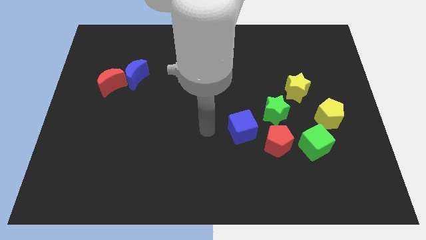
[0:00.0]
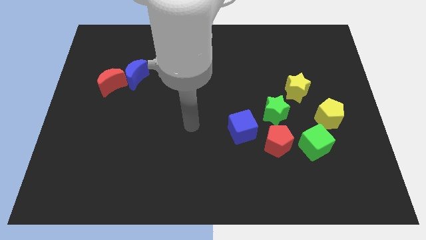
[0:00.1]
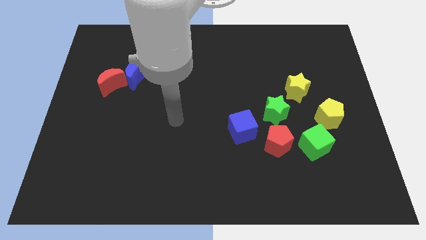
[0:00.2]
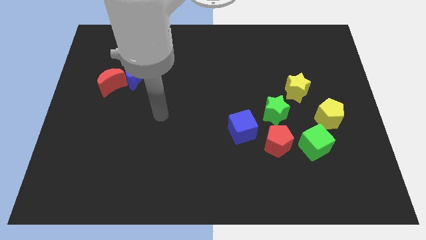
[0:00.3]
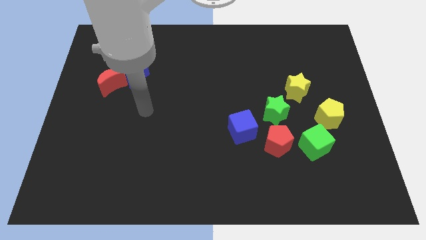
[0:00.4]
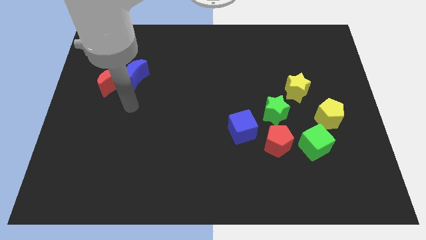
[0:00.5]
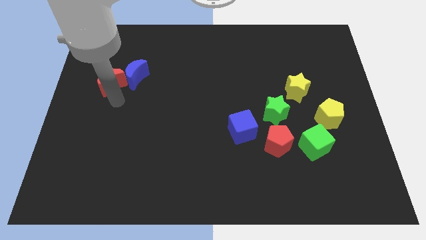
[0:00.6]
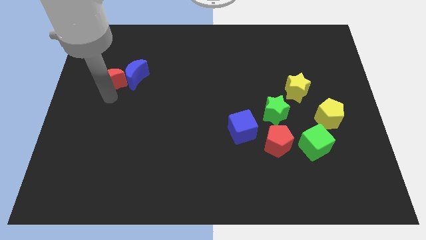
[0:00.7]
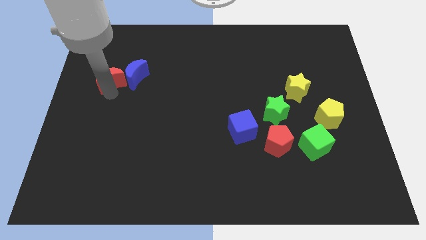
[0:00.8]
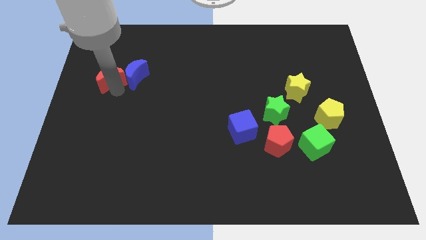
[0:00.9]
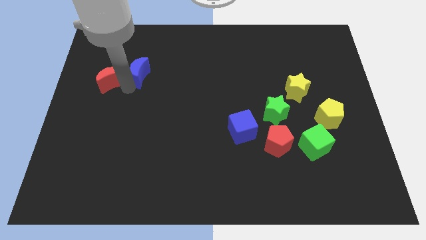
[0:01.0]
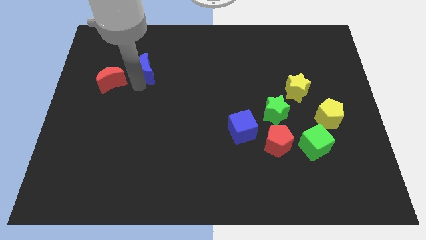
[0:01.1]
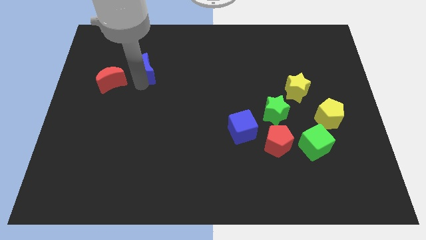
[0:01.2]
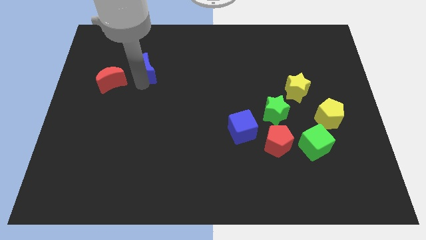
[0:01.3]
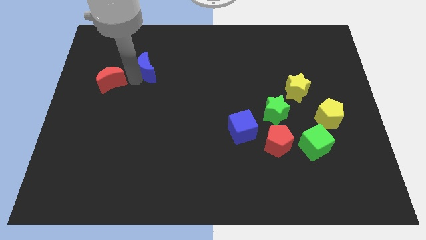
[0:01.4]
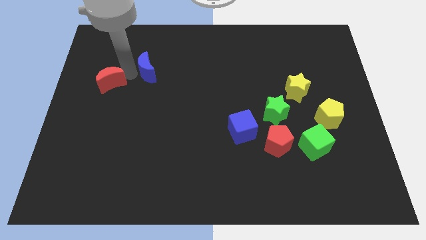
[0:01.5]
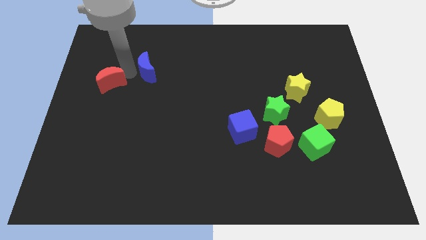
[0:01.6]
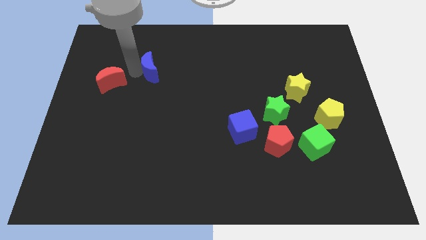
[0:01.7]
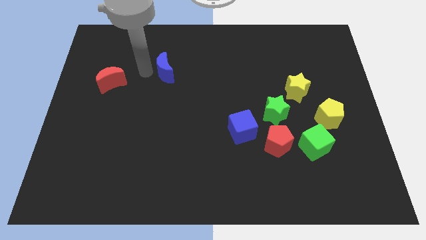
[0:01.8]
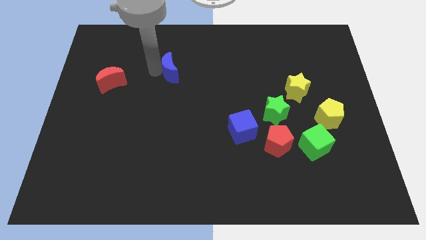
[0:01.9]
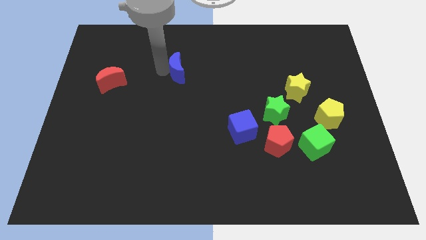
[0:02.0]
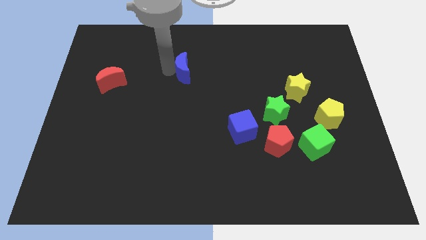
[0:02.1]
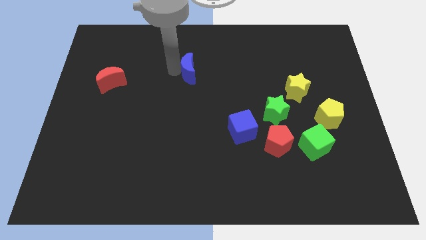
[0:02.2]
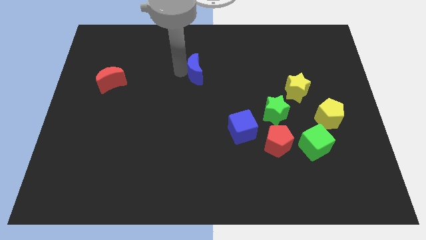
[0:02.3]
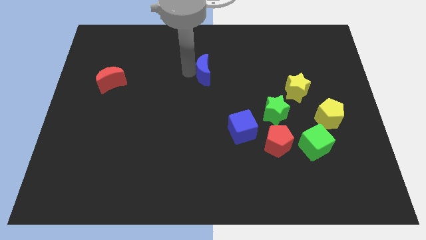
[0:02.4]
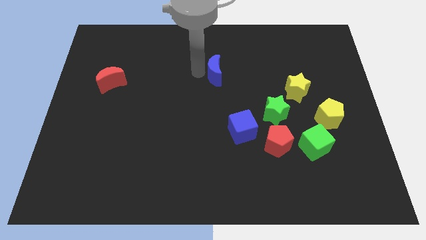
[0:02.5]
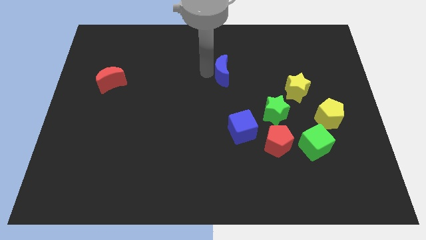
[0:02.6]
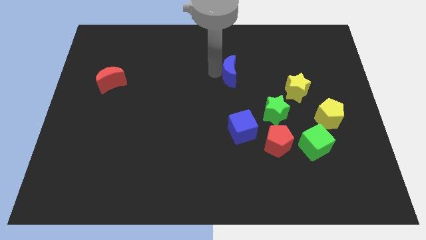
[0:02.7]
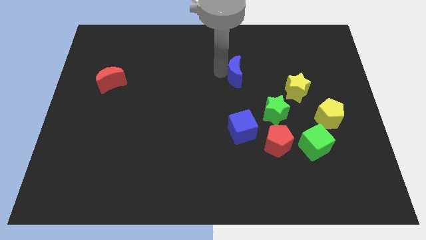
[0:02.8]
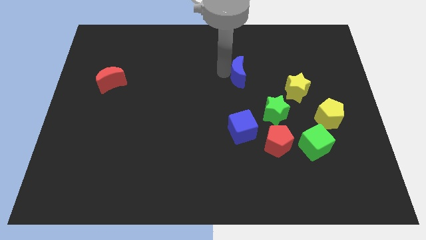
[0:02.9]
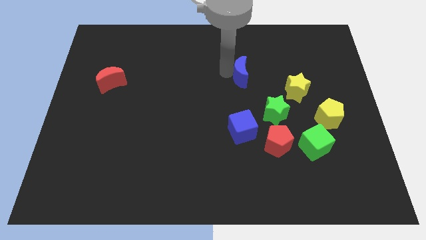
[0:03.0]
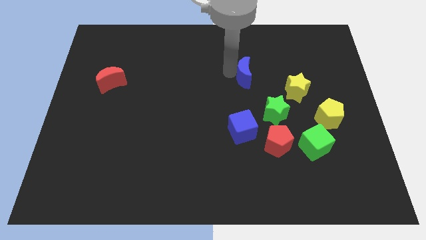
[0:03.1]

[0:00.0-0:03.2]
separate the blue crescent from the red crescent

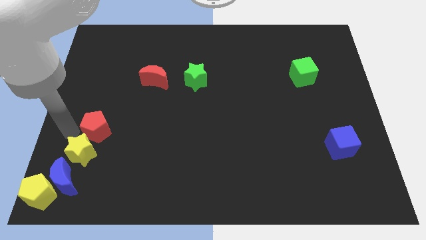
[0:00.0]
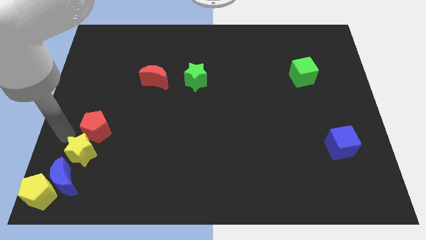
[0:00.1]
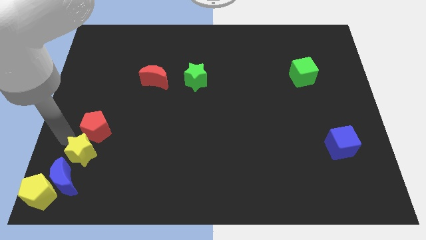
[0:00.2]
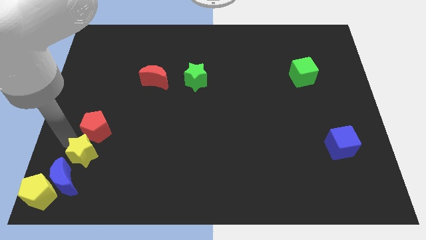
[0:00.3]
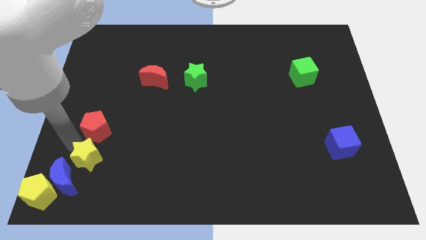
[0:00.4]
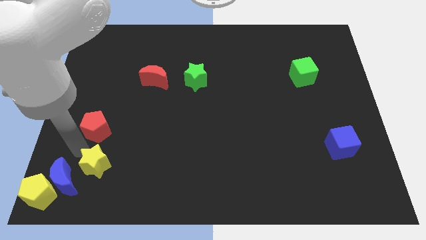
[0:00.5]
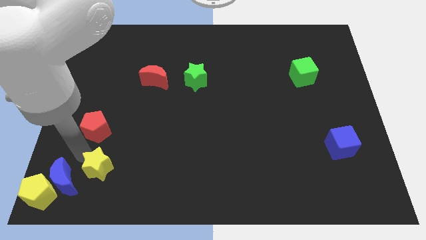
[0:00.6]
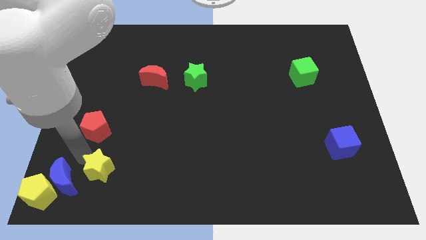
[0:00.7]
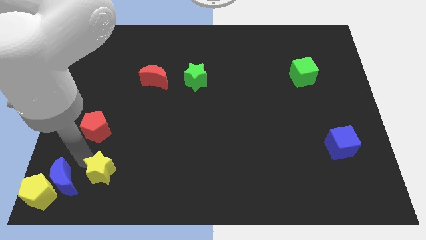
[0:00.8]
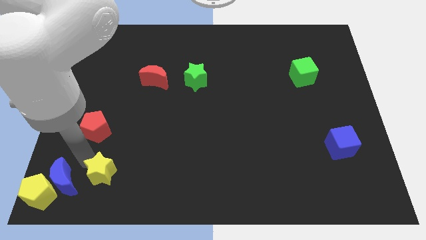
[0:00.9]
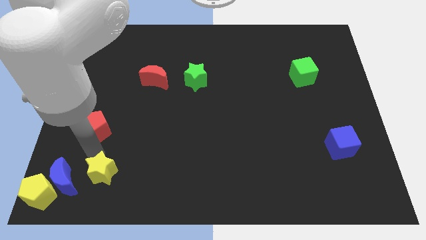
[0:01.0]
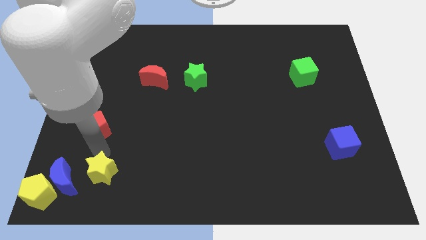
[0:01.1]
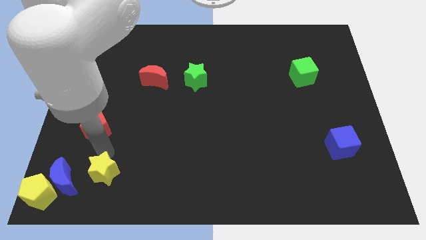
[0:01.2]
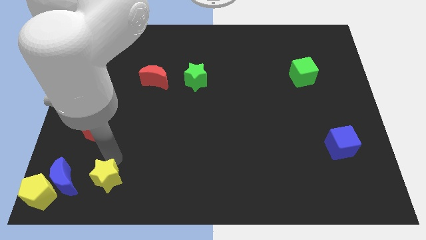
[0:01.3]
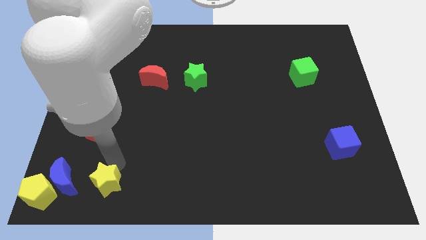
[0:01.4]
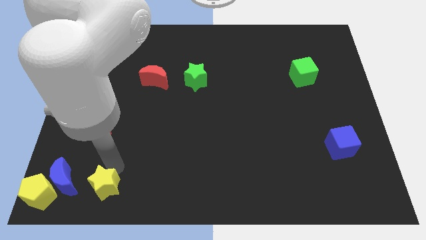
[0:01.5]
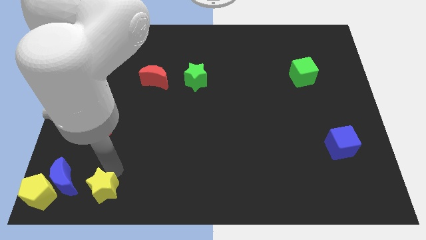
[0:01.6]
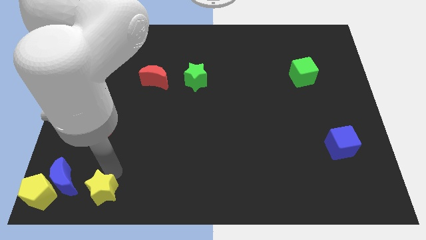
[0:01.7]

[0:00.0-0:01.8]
push the yellow star to the right of the blue crescent

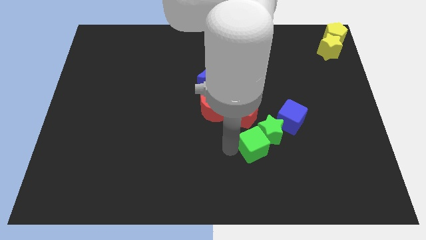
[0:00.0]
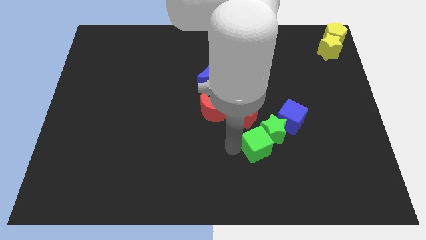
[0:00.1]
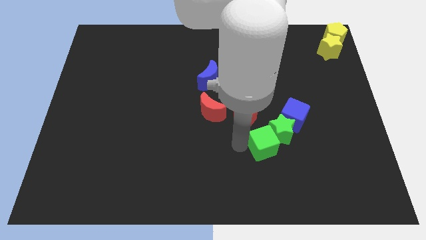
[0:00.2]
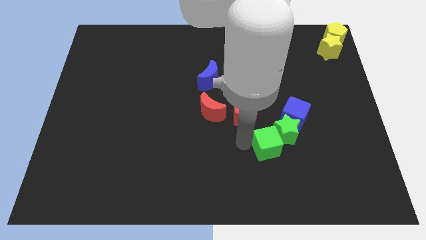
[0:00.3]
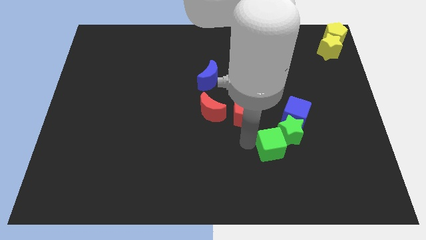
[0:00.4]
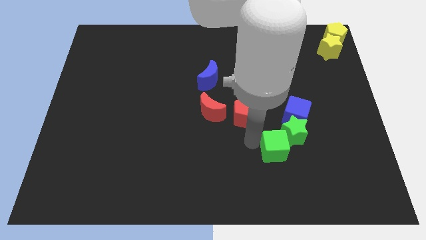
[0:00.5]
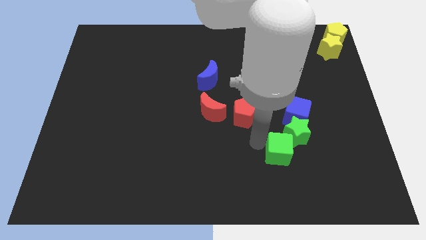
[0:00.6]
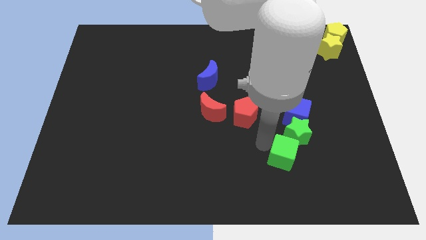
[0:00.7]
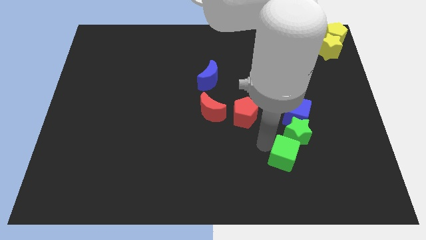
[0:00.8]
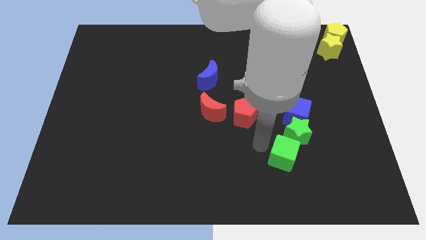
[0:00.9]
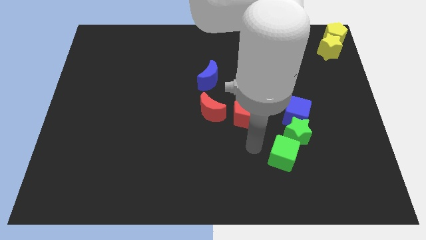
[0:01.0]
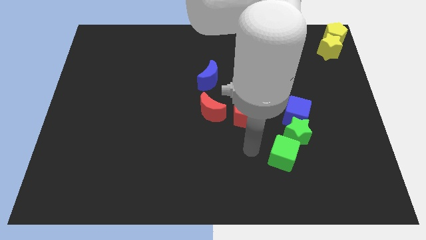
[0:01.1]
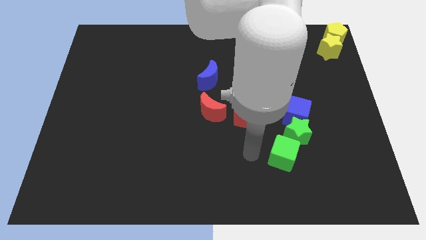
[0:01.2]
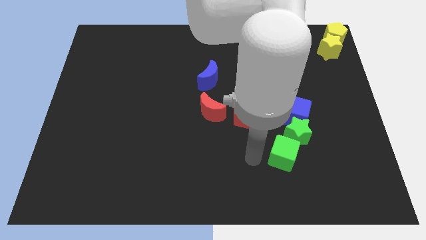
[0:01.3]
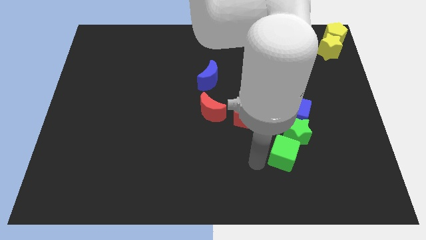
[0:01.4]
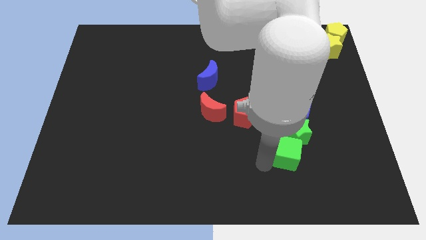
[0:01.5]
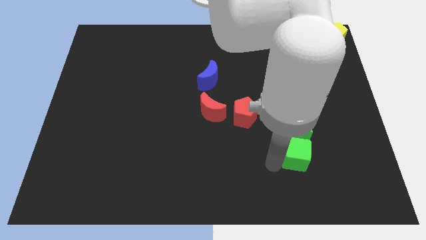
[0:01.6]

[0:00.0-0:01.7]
adjust the green blocks at the bottom of the blue cube

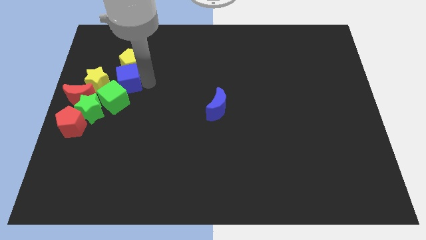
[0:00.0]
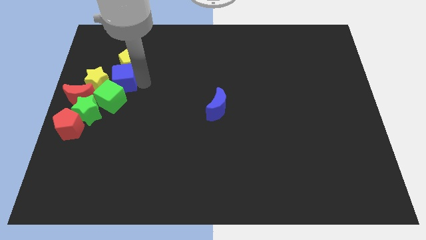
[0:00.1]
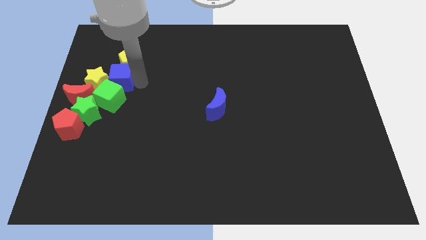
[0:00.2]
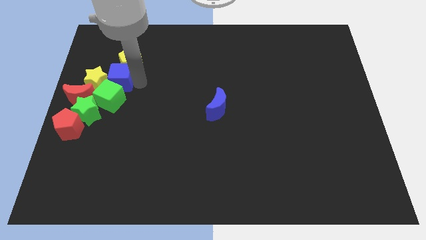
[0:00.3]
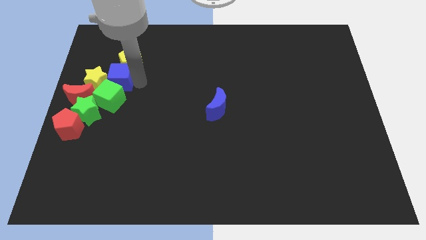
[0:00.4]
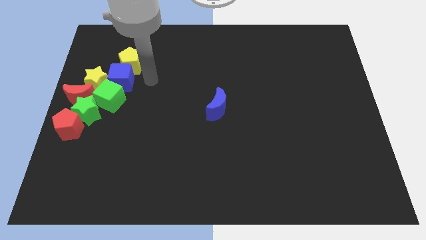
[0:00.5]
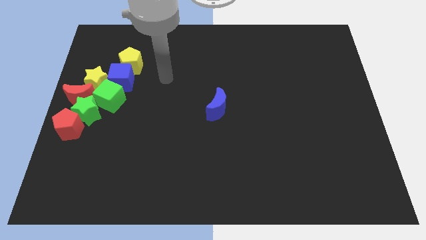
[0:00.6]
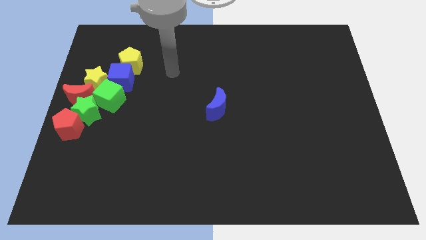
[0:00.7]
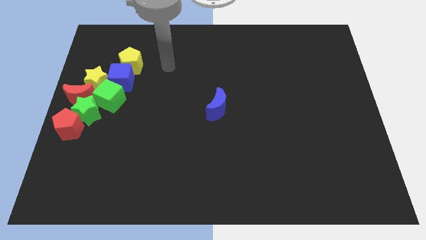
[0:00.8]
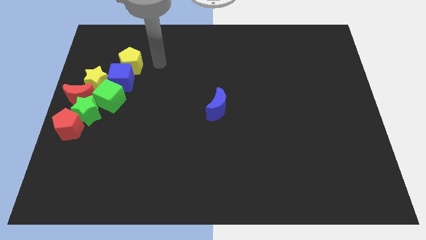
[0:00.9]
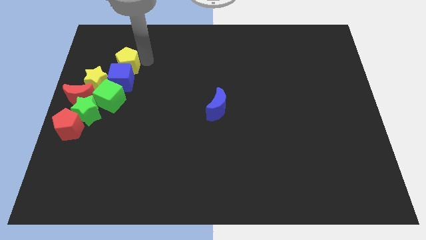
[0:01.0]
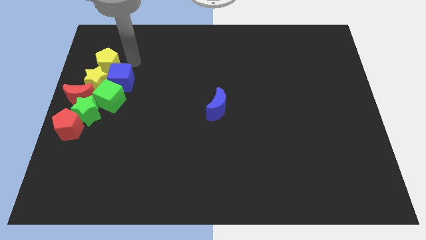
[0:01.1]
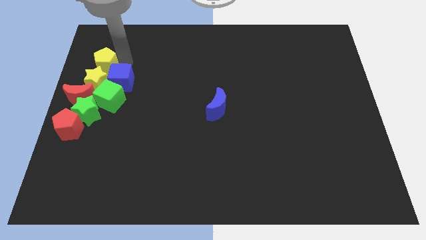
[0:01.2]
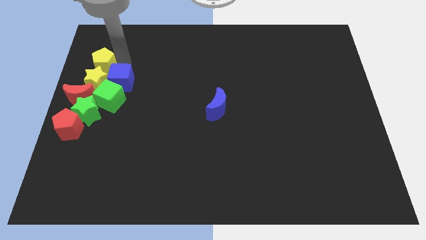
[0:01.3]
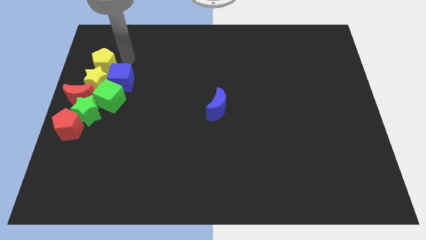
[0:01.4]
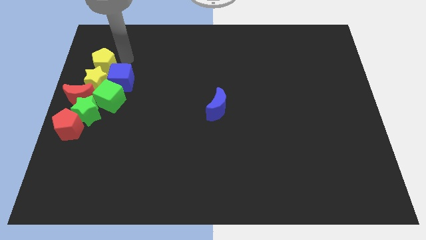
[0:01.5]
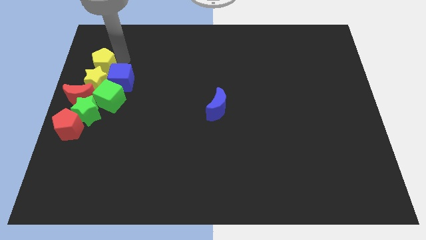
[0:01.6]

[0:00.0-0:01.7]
move the yellow pentagon to the top of the yellow star

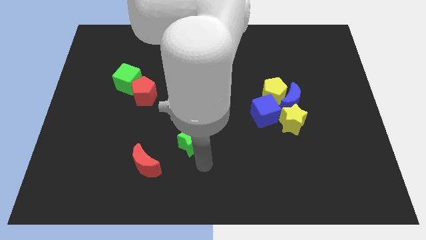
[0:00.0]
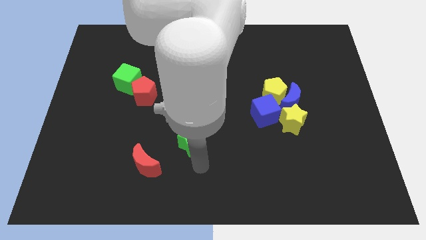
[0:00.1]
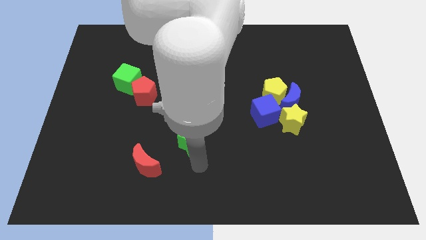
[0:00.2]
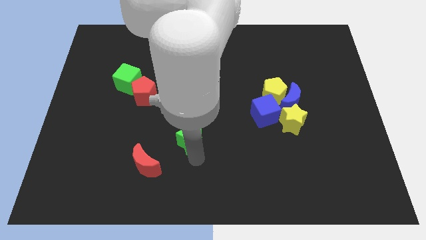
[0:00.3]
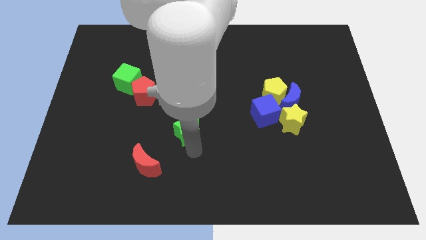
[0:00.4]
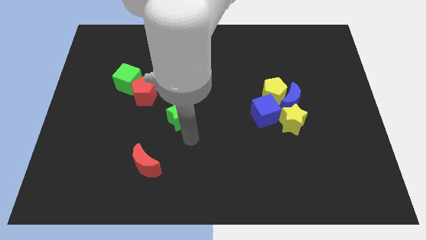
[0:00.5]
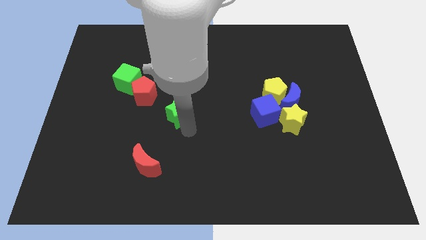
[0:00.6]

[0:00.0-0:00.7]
slightly push the green star towards the red pentagon
